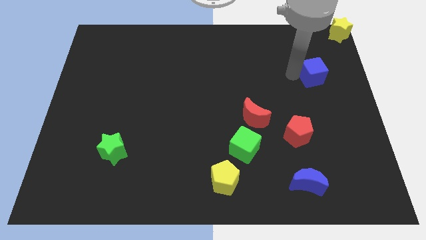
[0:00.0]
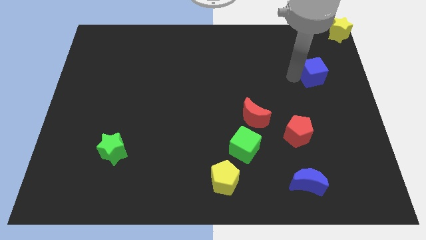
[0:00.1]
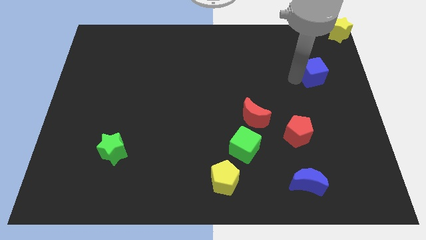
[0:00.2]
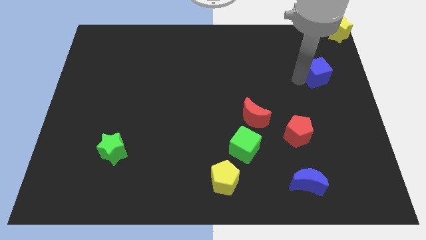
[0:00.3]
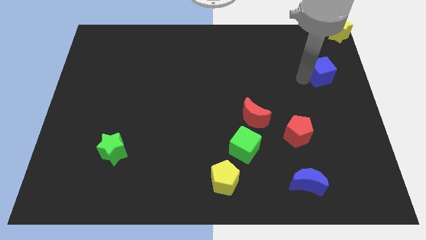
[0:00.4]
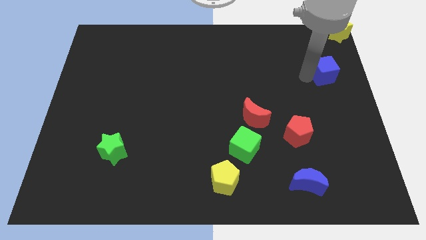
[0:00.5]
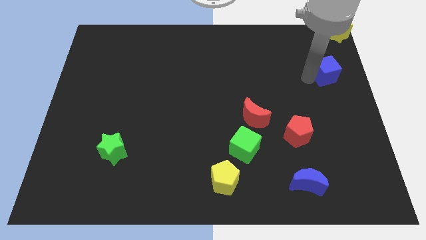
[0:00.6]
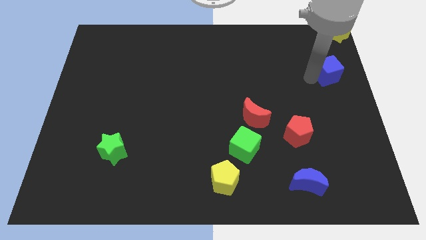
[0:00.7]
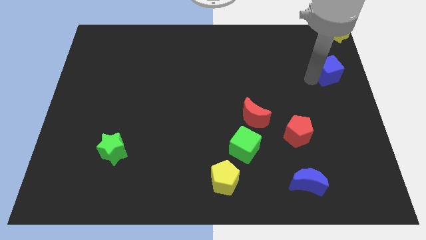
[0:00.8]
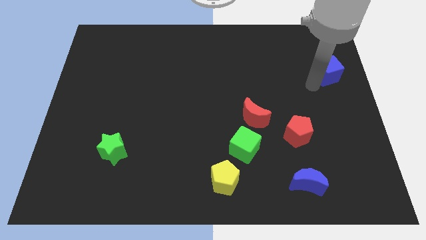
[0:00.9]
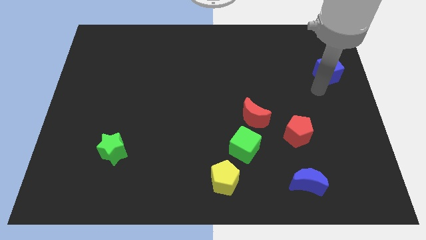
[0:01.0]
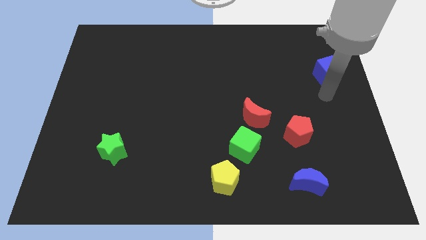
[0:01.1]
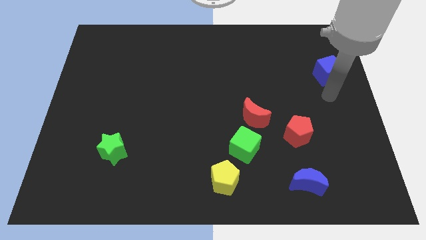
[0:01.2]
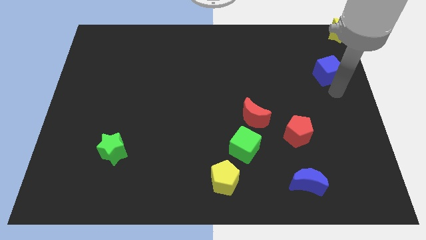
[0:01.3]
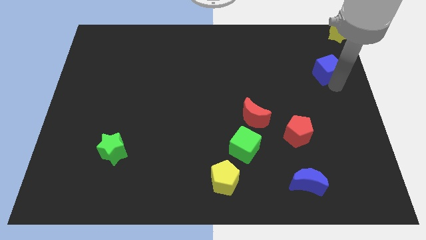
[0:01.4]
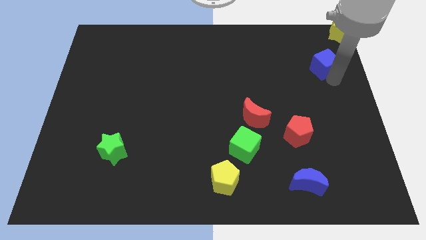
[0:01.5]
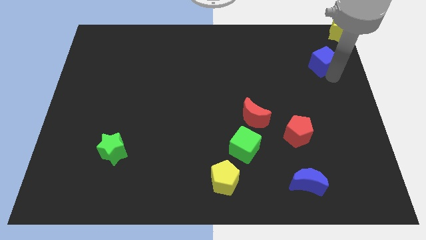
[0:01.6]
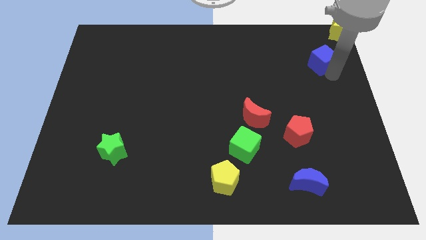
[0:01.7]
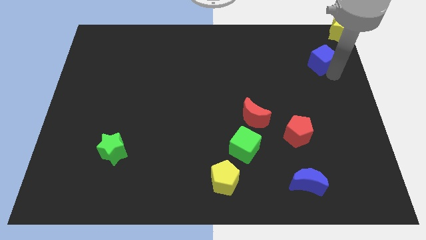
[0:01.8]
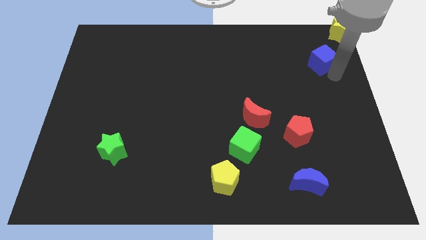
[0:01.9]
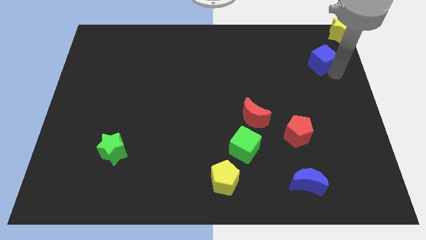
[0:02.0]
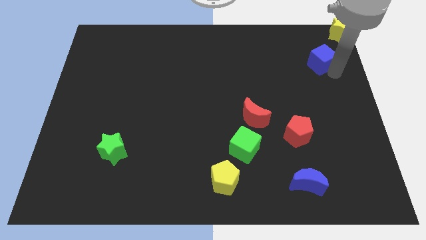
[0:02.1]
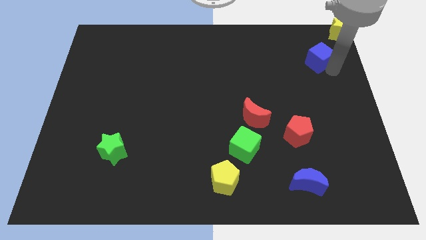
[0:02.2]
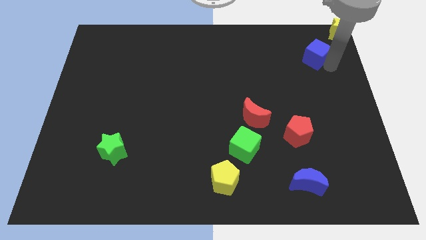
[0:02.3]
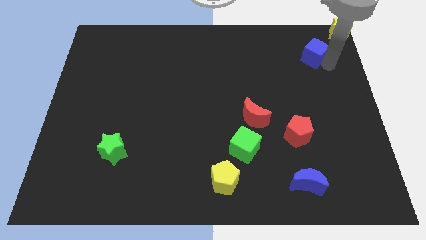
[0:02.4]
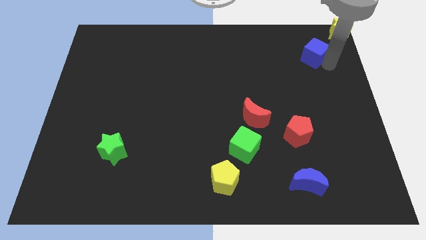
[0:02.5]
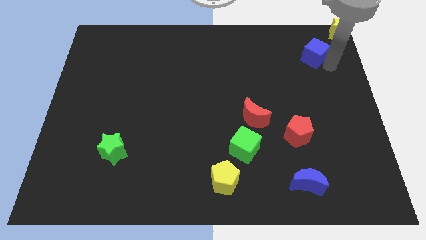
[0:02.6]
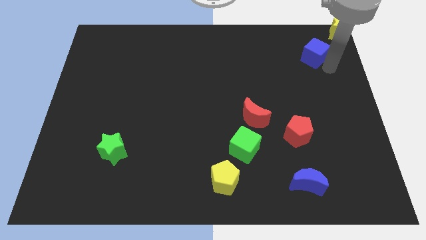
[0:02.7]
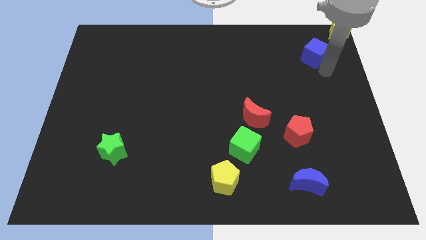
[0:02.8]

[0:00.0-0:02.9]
move the blue cube diagonally to the yellow star

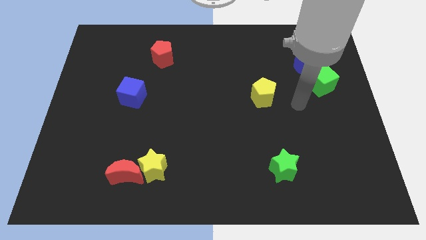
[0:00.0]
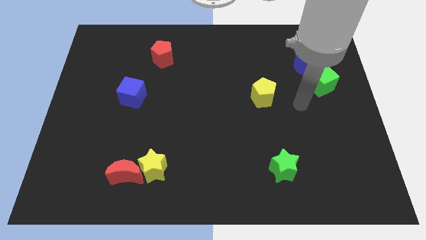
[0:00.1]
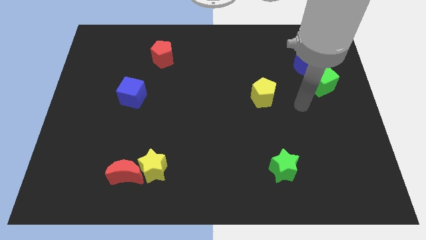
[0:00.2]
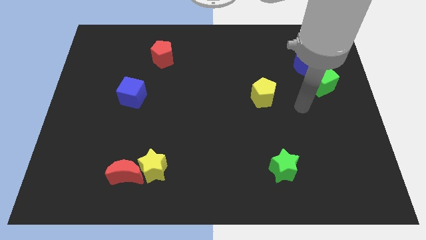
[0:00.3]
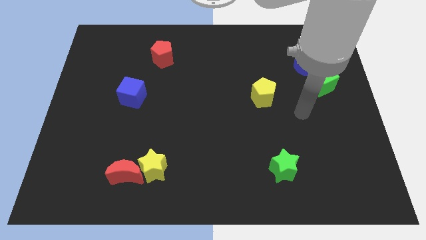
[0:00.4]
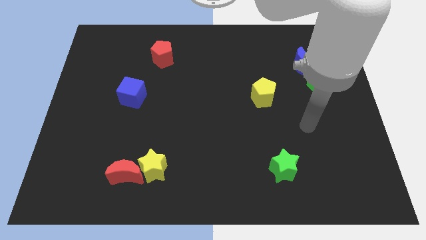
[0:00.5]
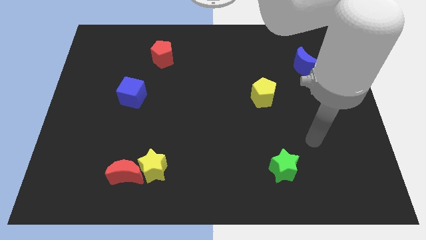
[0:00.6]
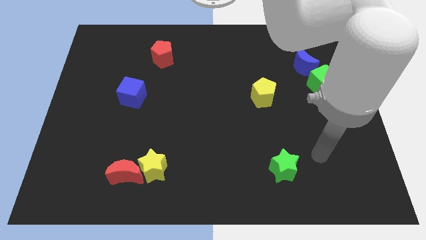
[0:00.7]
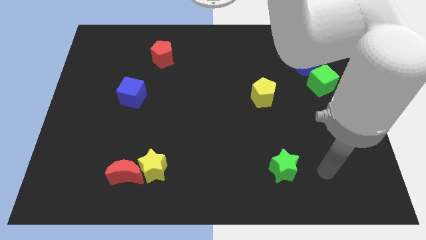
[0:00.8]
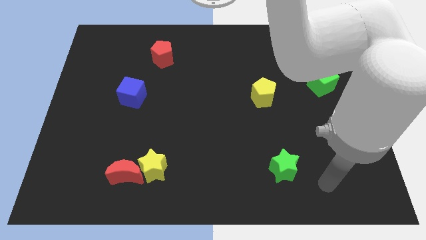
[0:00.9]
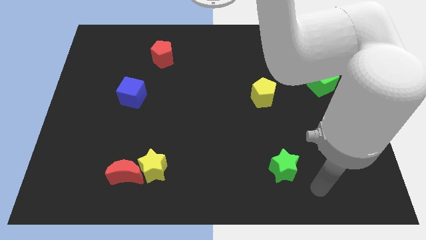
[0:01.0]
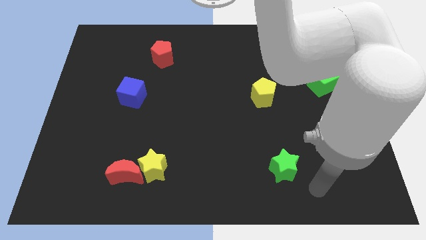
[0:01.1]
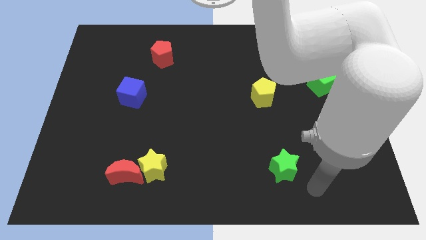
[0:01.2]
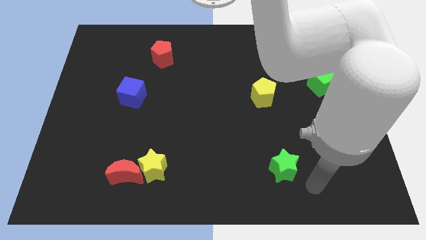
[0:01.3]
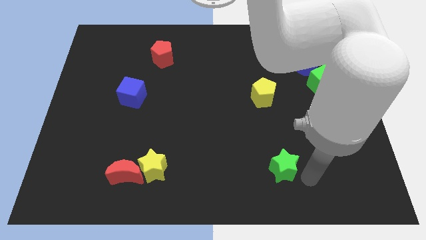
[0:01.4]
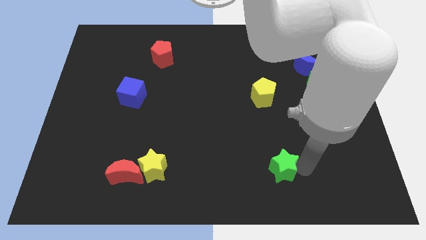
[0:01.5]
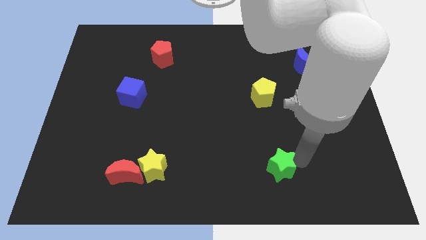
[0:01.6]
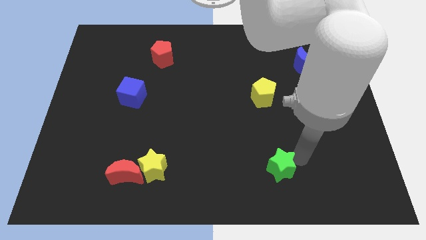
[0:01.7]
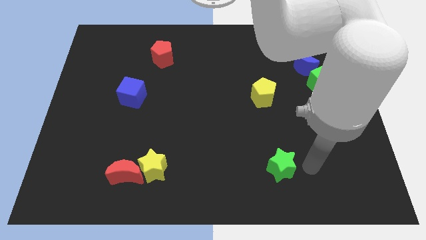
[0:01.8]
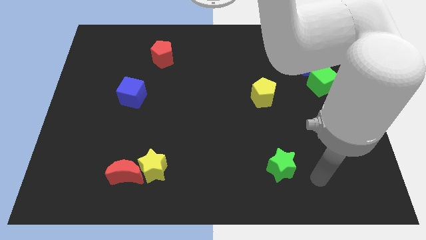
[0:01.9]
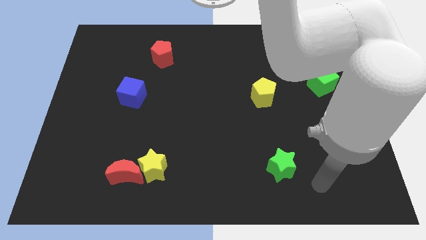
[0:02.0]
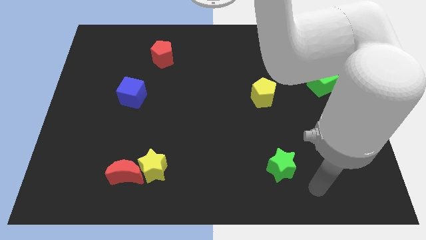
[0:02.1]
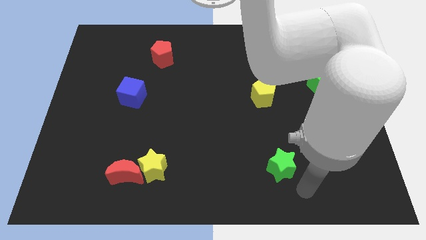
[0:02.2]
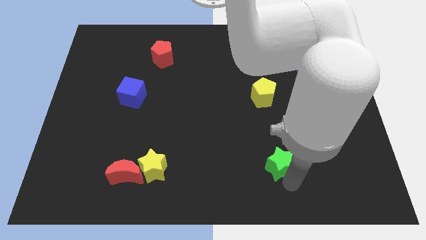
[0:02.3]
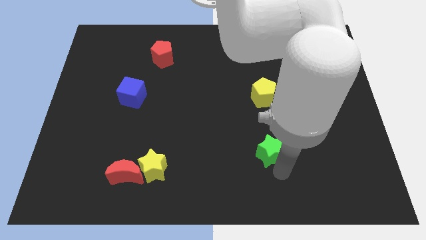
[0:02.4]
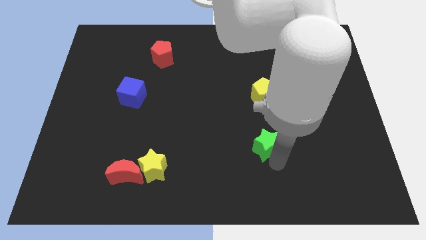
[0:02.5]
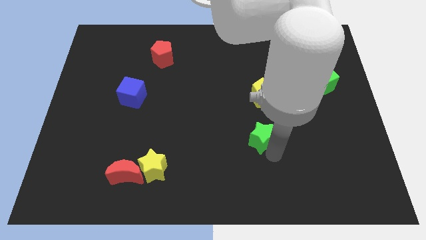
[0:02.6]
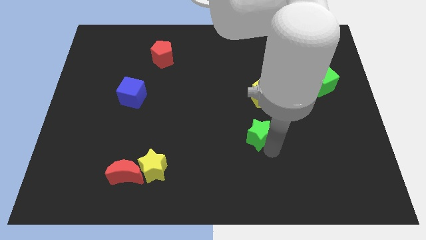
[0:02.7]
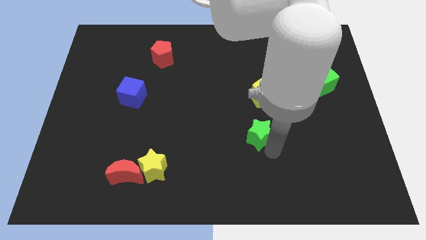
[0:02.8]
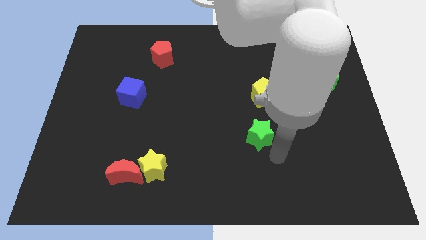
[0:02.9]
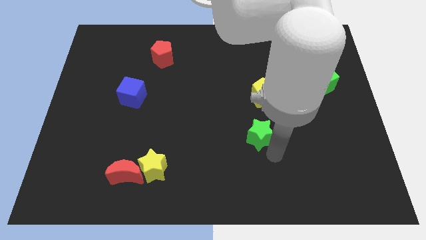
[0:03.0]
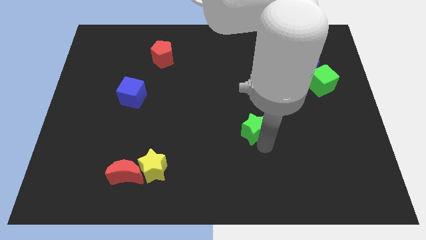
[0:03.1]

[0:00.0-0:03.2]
push the green star slightly to the top

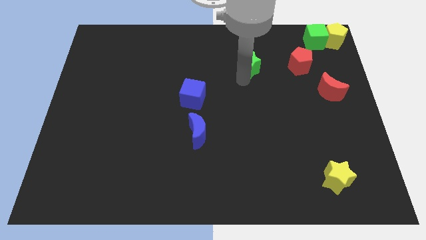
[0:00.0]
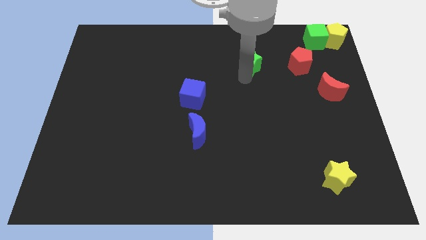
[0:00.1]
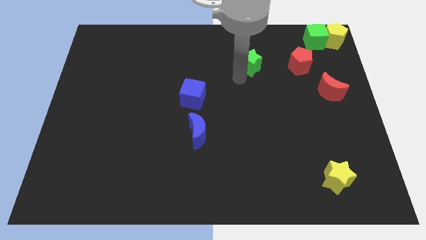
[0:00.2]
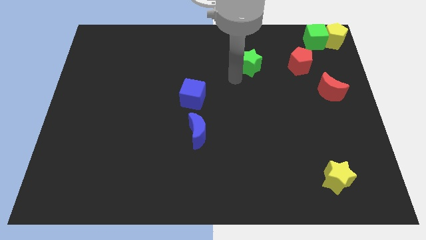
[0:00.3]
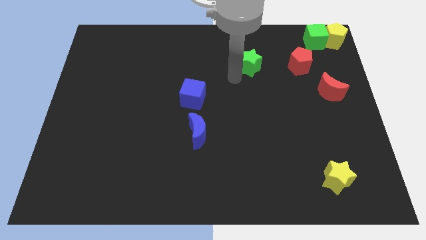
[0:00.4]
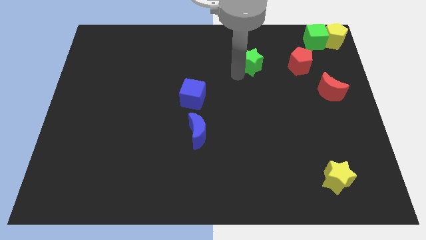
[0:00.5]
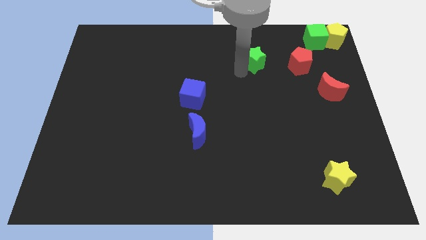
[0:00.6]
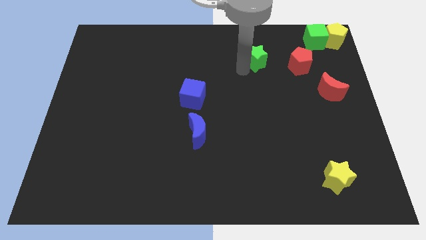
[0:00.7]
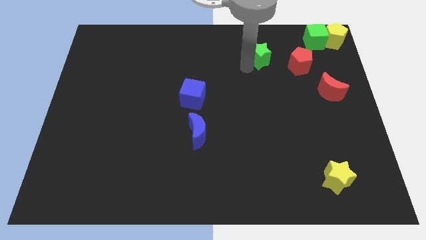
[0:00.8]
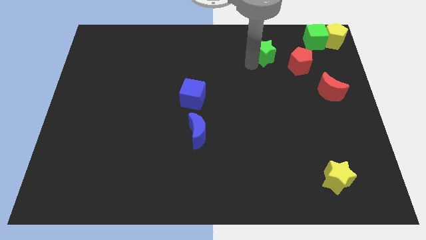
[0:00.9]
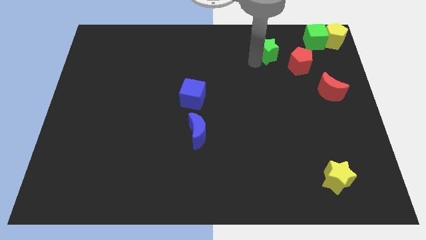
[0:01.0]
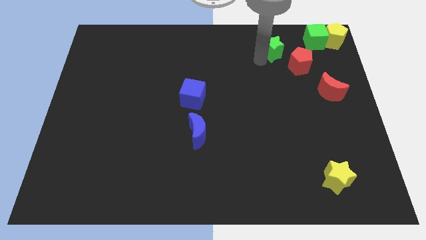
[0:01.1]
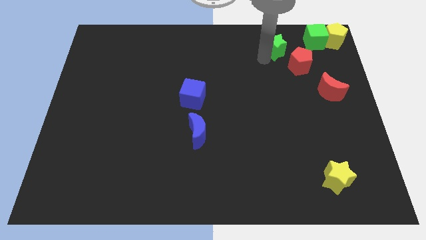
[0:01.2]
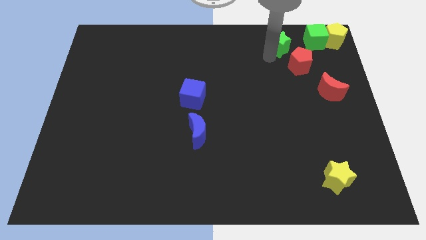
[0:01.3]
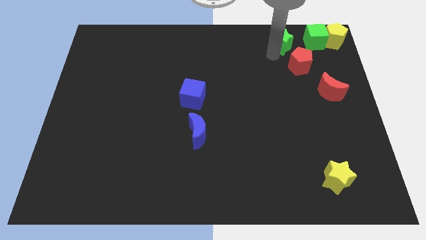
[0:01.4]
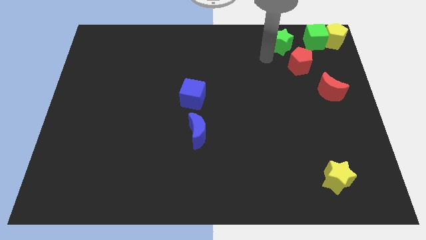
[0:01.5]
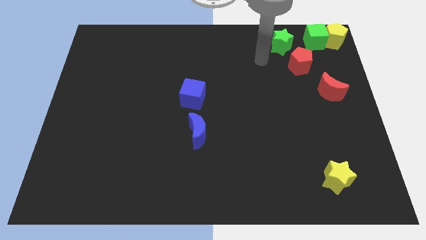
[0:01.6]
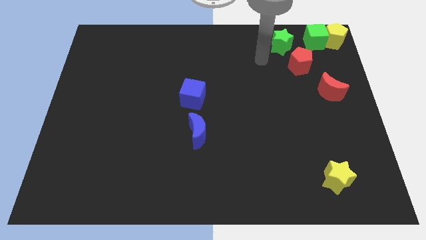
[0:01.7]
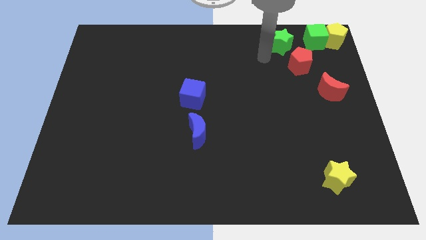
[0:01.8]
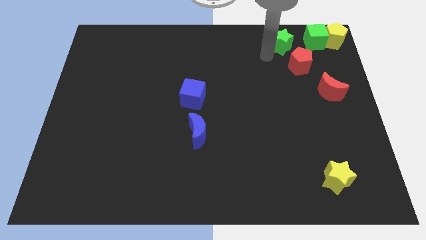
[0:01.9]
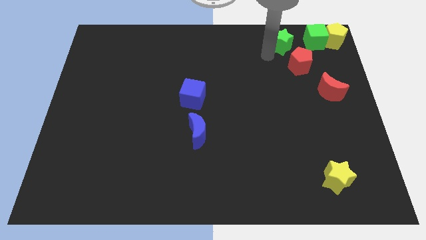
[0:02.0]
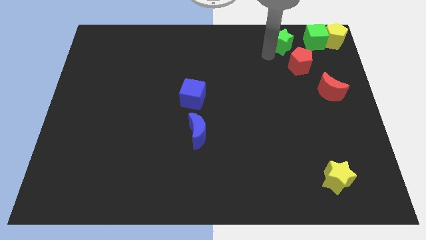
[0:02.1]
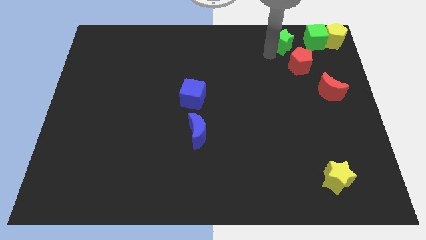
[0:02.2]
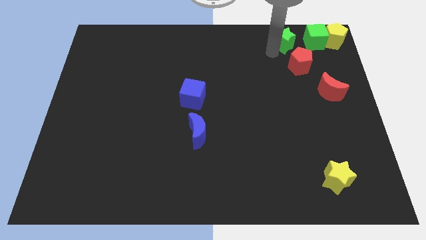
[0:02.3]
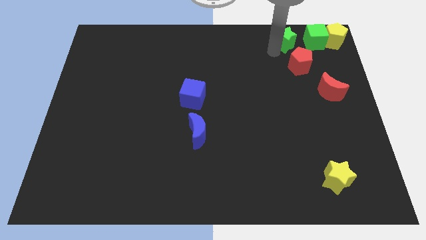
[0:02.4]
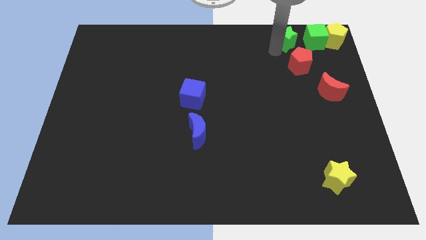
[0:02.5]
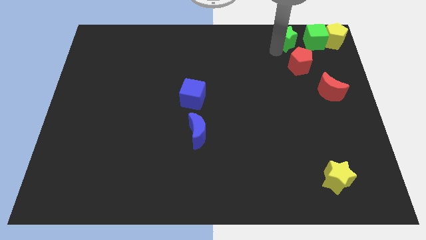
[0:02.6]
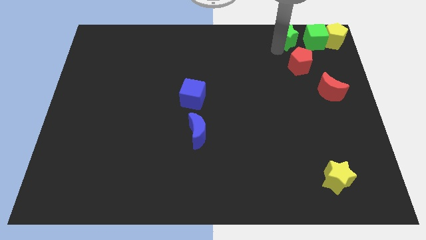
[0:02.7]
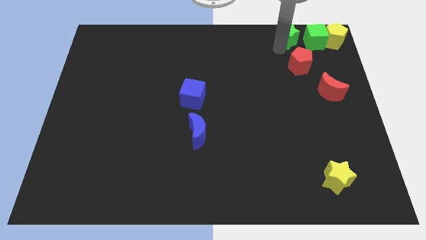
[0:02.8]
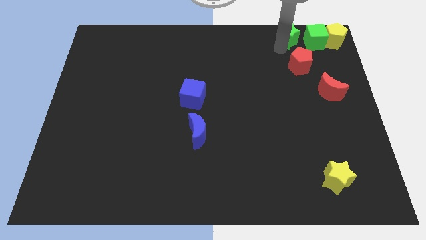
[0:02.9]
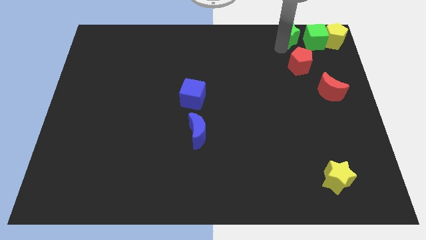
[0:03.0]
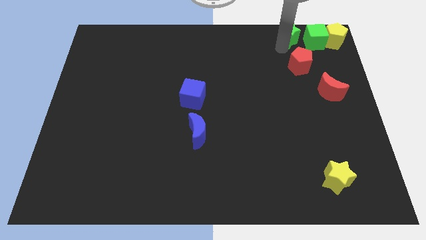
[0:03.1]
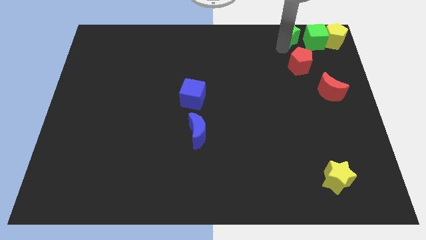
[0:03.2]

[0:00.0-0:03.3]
move the green star close to the left side of the green cube
